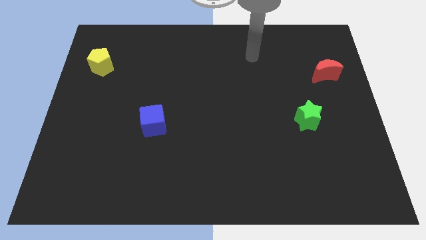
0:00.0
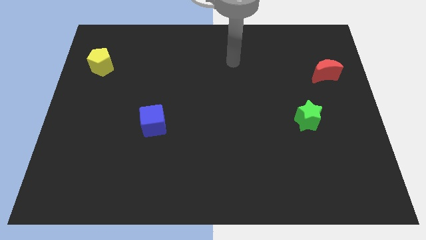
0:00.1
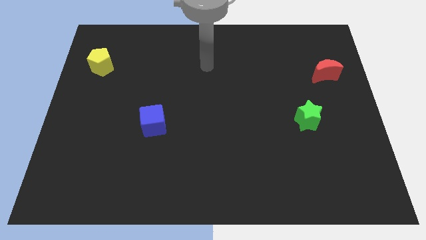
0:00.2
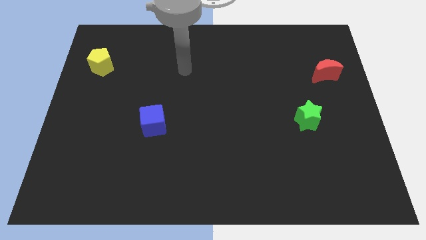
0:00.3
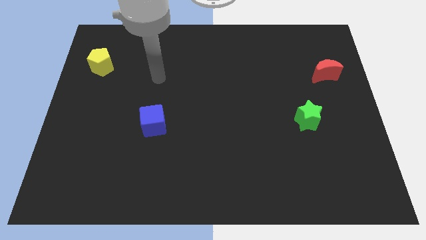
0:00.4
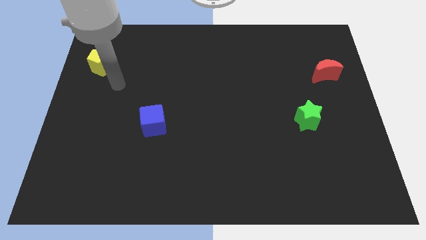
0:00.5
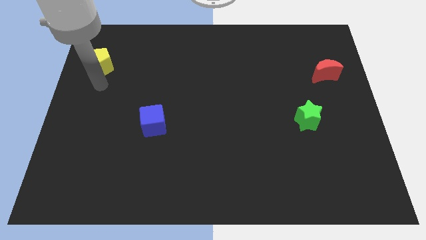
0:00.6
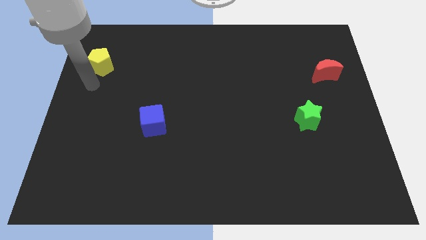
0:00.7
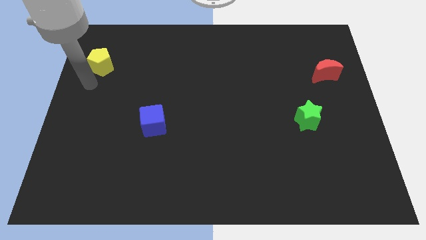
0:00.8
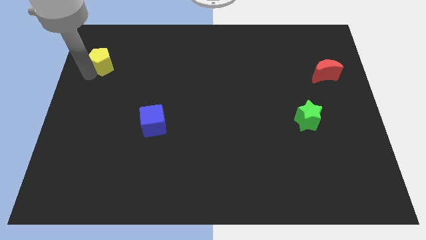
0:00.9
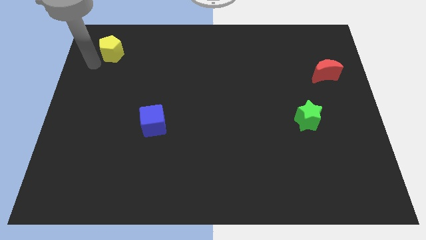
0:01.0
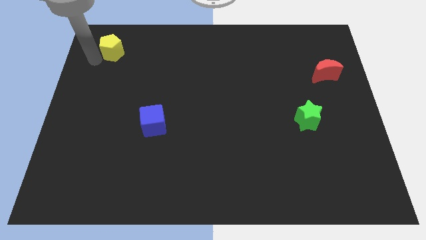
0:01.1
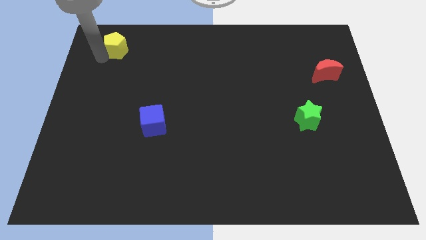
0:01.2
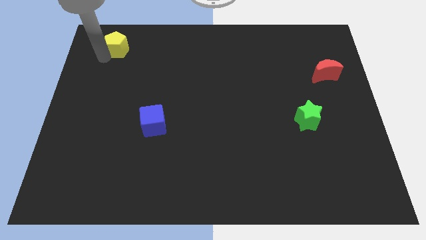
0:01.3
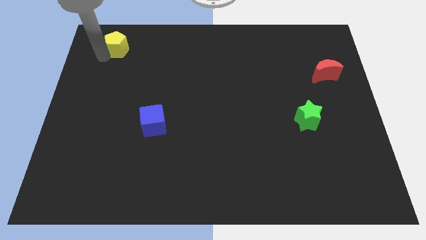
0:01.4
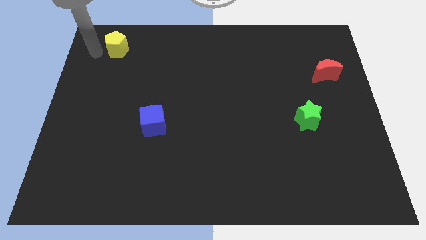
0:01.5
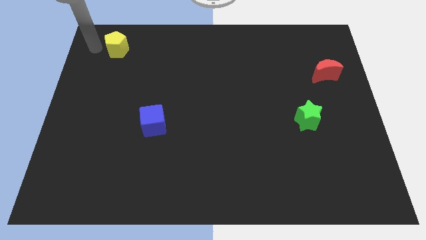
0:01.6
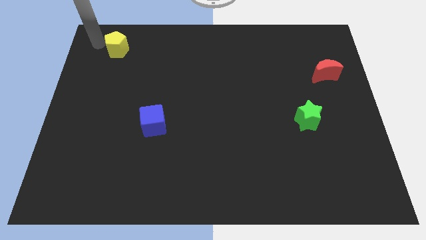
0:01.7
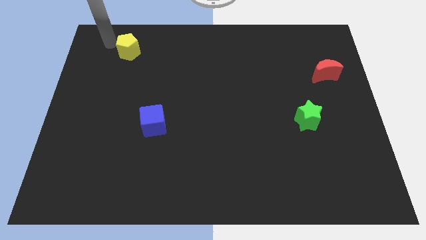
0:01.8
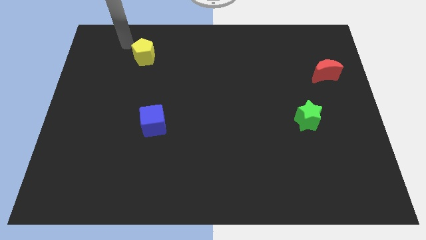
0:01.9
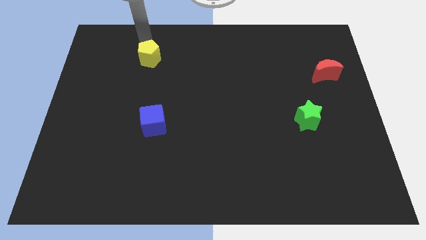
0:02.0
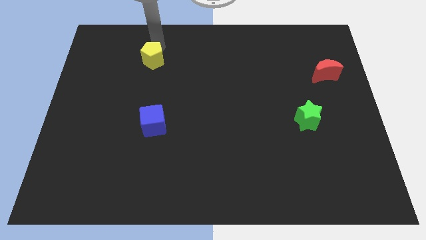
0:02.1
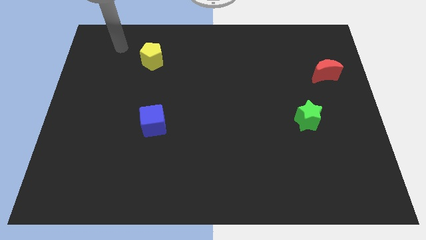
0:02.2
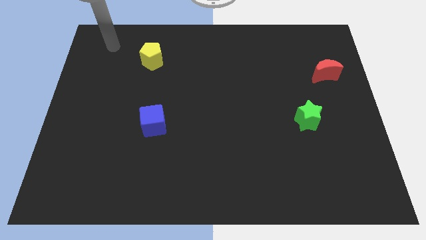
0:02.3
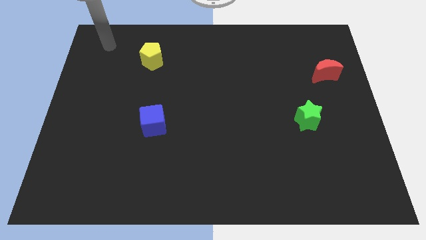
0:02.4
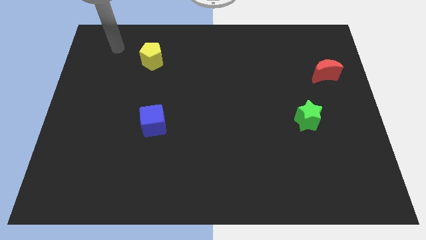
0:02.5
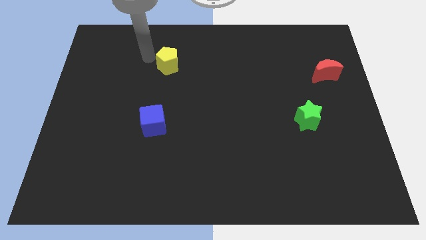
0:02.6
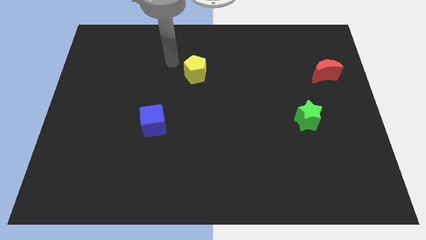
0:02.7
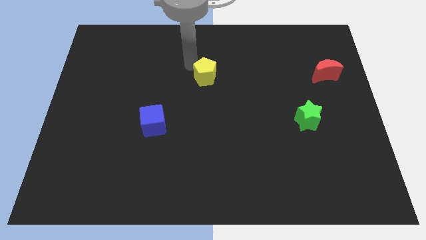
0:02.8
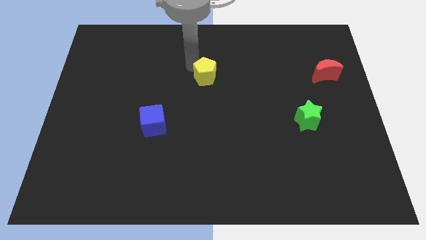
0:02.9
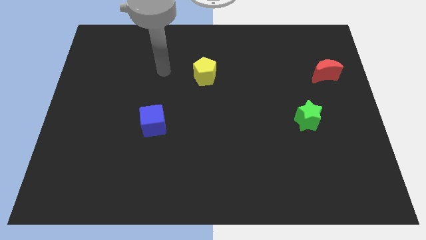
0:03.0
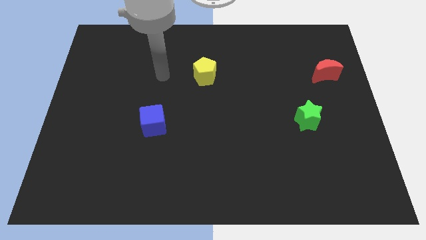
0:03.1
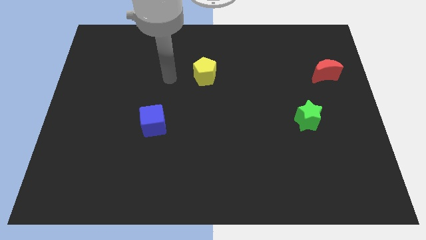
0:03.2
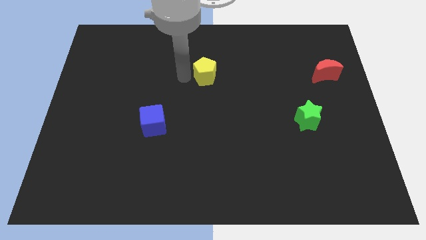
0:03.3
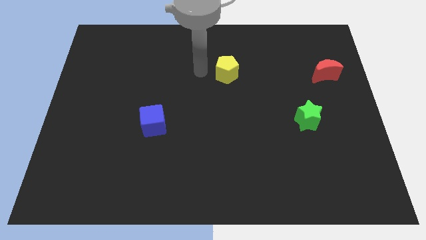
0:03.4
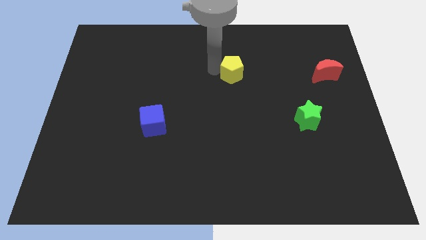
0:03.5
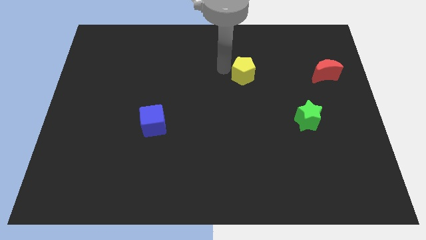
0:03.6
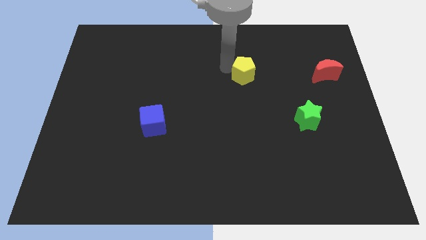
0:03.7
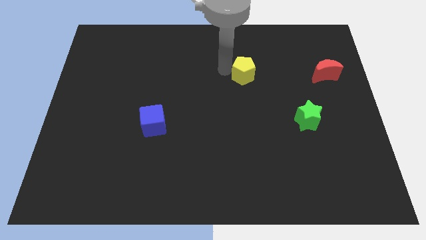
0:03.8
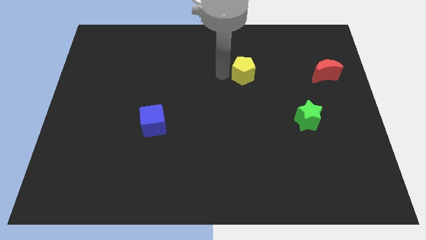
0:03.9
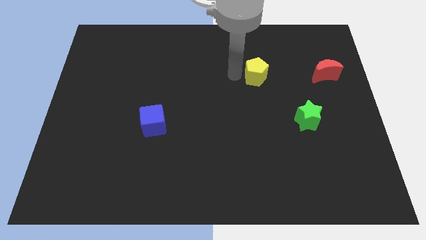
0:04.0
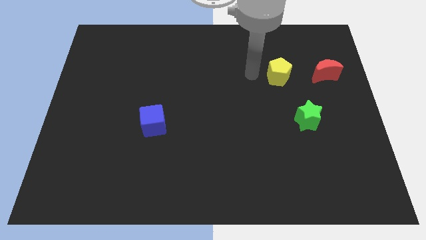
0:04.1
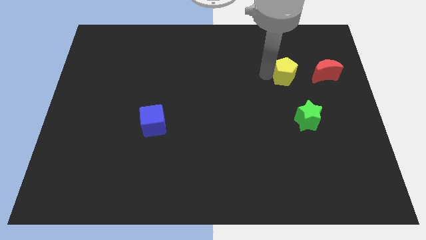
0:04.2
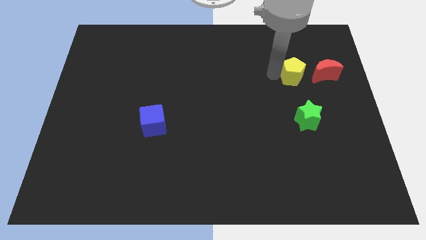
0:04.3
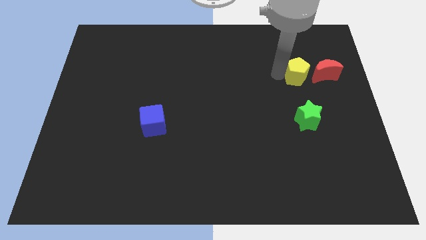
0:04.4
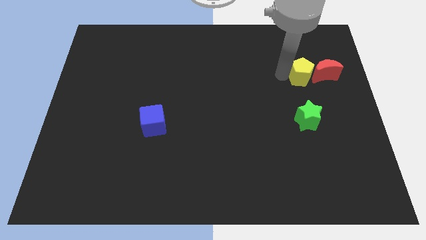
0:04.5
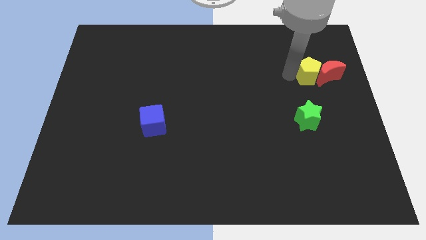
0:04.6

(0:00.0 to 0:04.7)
put the yellow block close to the red block

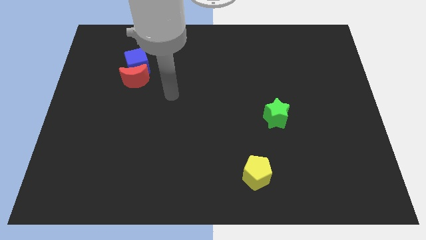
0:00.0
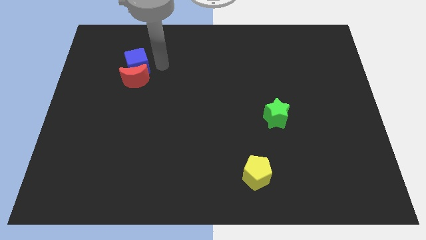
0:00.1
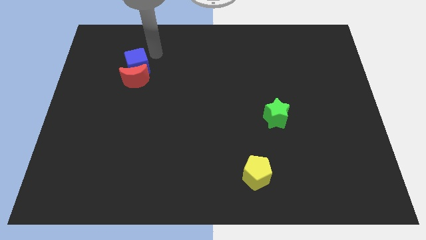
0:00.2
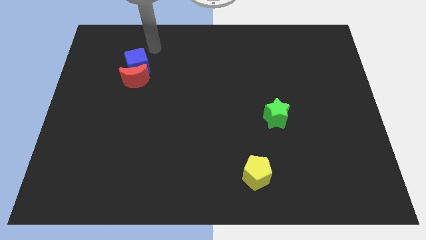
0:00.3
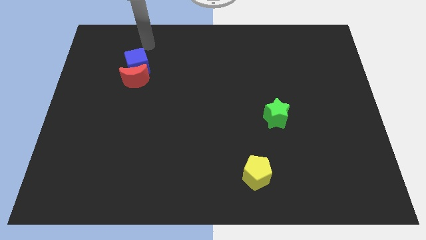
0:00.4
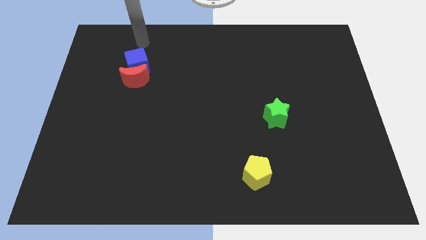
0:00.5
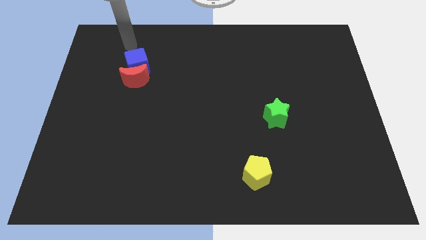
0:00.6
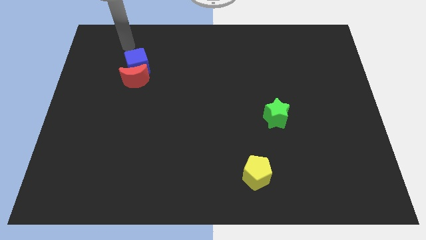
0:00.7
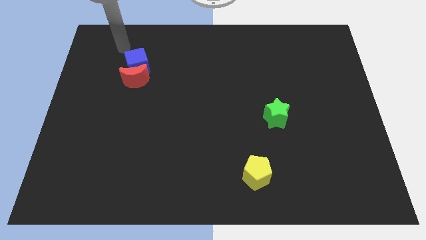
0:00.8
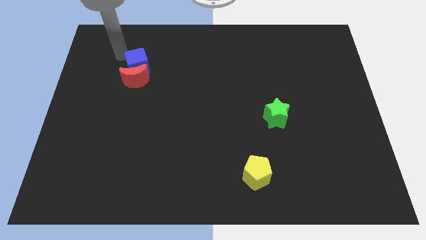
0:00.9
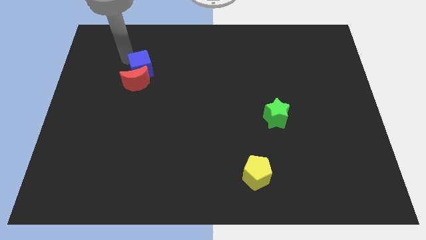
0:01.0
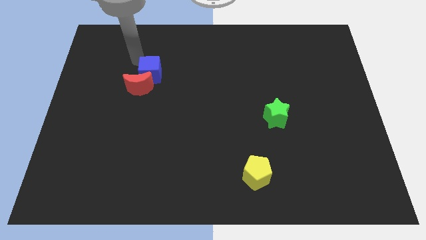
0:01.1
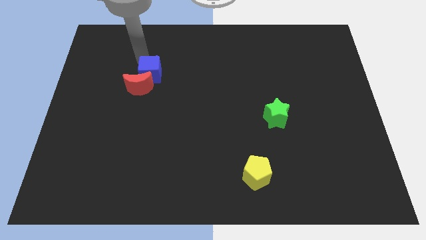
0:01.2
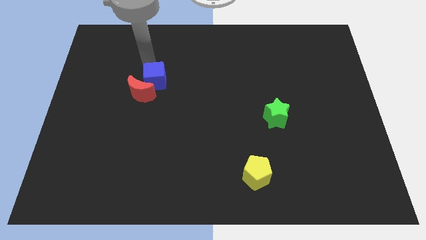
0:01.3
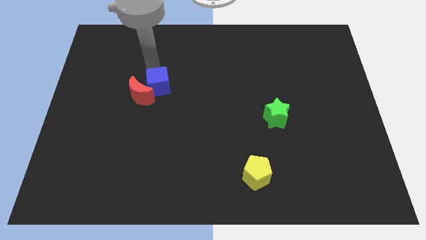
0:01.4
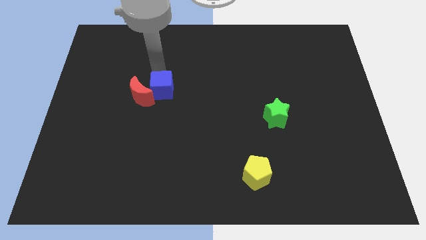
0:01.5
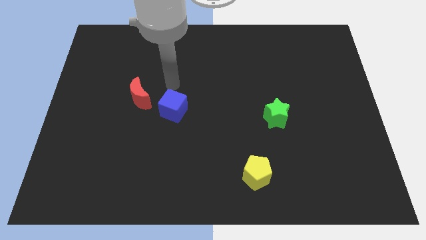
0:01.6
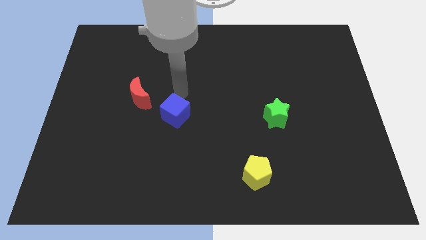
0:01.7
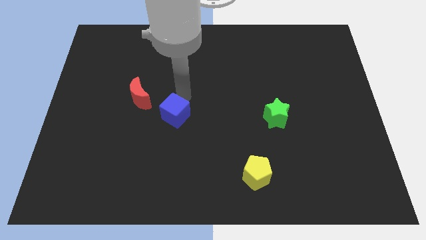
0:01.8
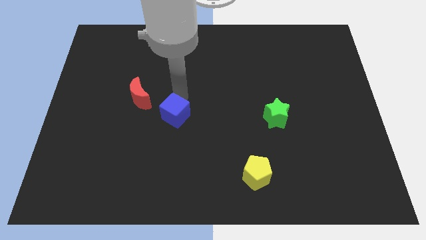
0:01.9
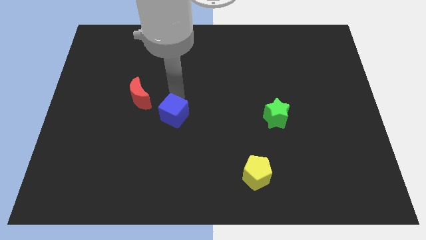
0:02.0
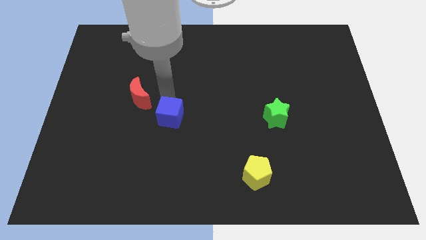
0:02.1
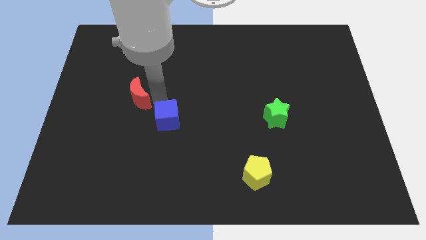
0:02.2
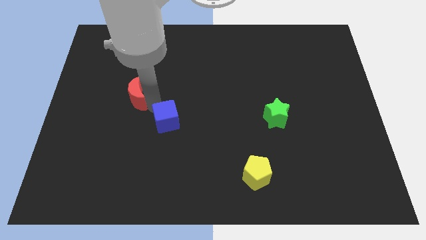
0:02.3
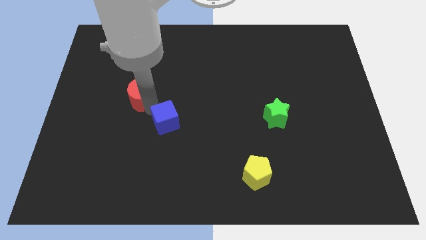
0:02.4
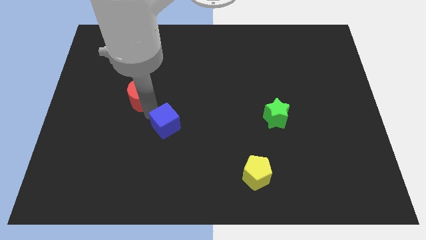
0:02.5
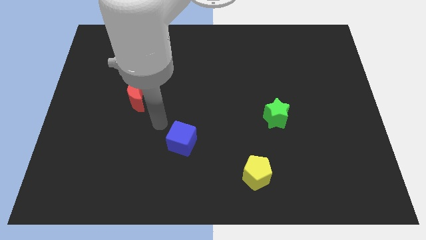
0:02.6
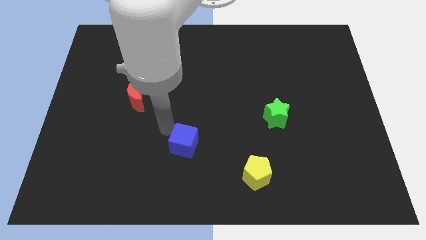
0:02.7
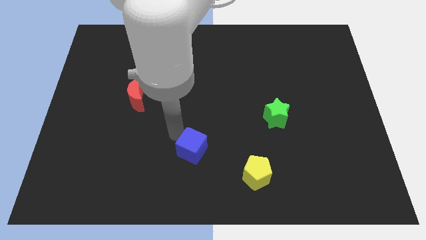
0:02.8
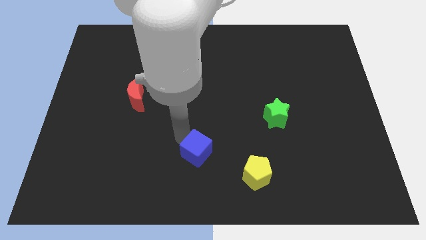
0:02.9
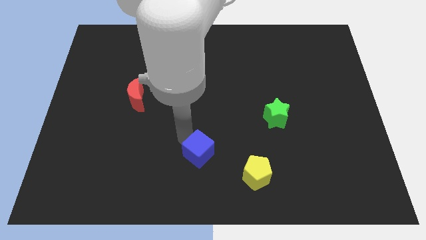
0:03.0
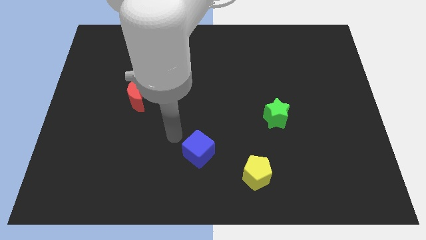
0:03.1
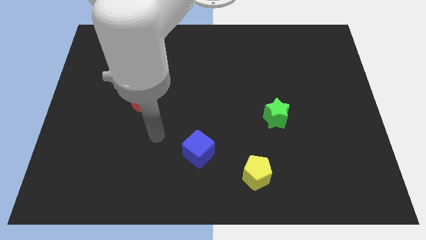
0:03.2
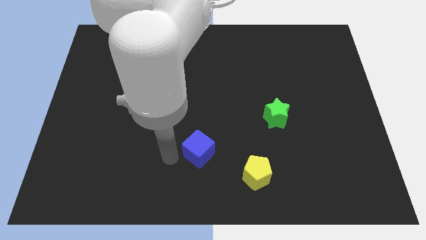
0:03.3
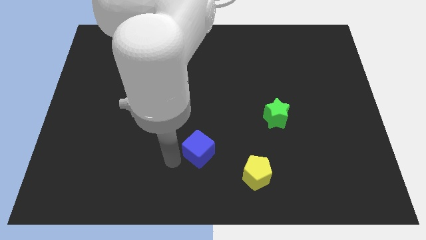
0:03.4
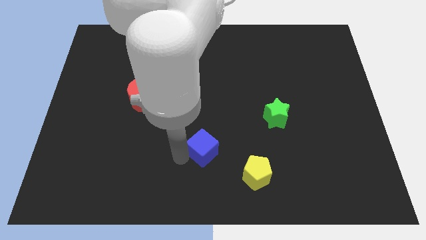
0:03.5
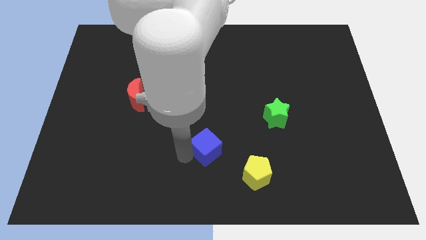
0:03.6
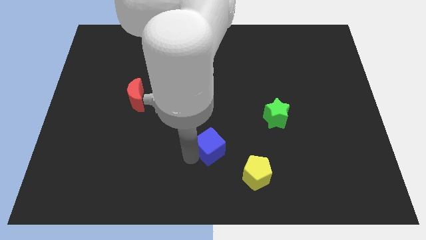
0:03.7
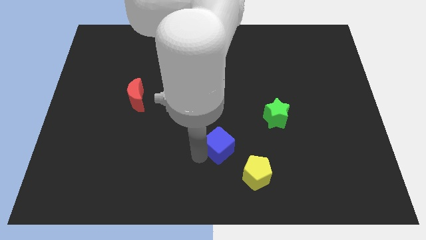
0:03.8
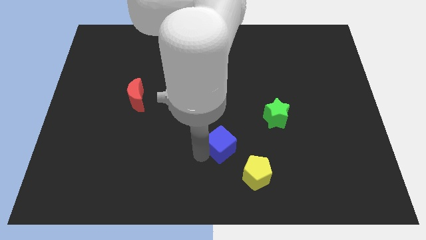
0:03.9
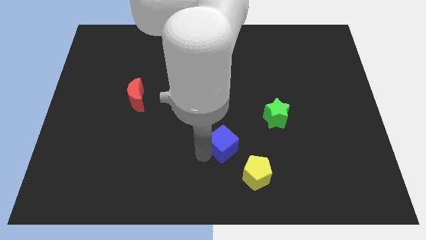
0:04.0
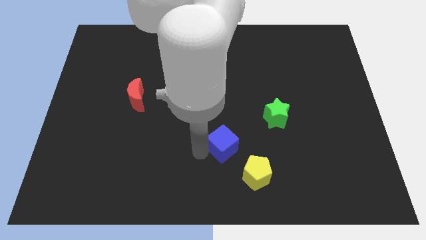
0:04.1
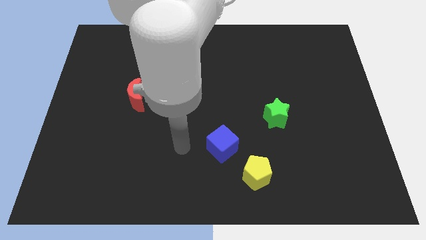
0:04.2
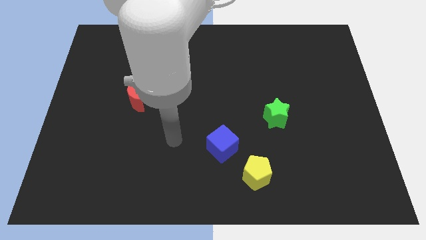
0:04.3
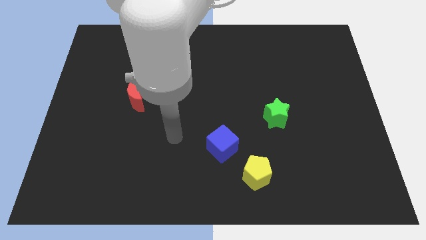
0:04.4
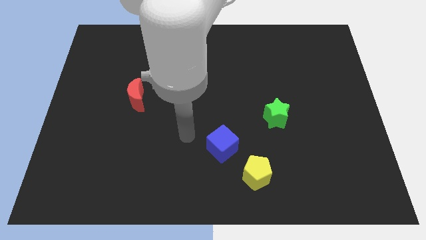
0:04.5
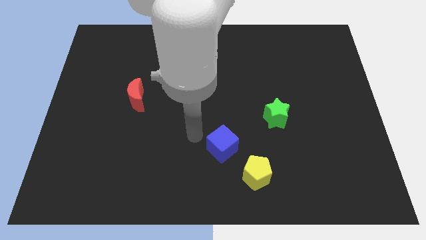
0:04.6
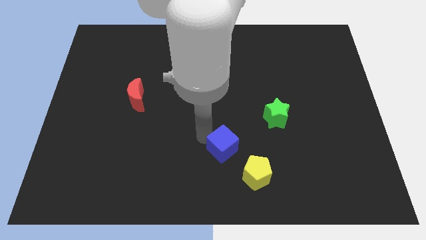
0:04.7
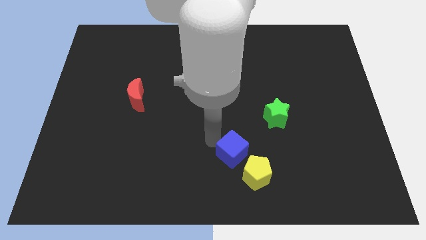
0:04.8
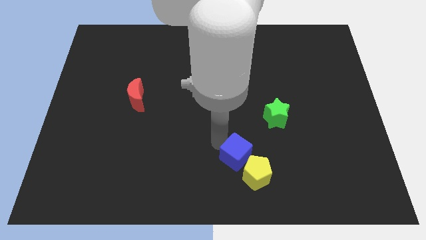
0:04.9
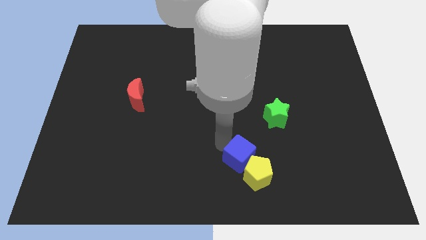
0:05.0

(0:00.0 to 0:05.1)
put the blue block next to the yellow pentagon
